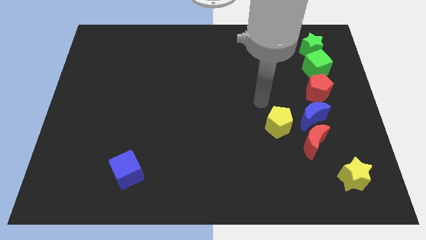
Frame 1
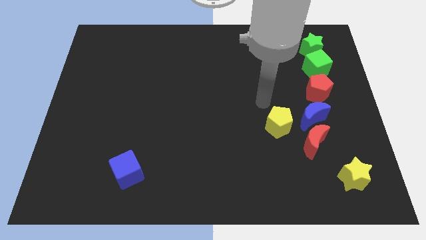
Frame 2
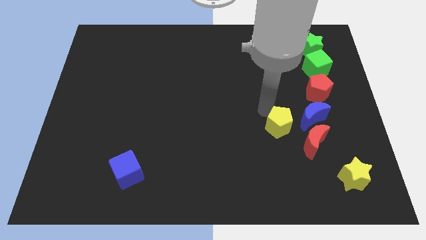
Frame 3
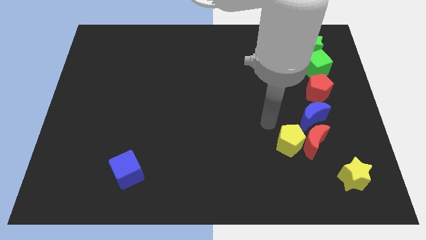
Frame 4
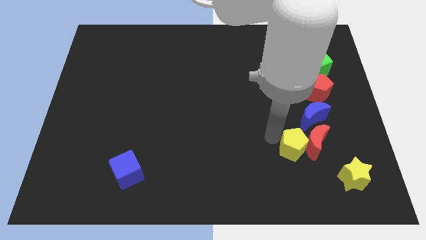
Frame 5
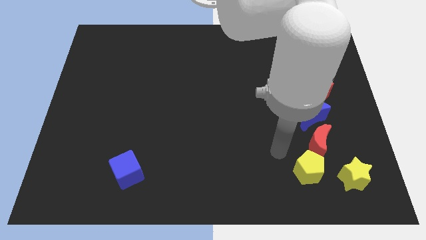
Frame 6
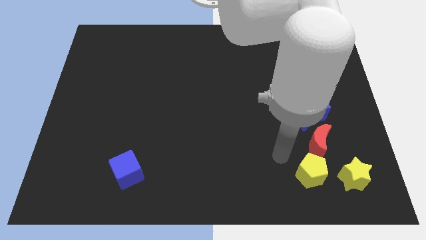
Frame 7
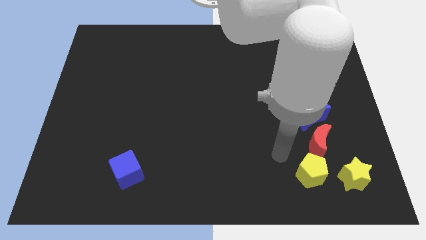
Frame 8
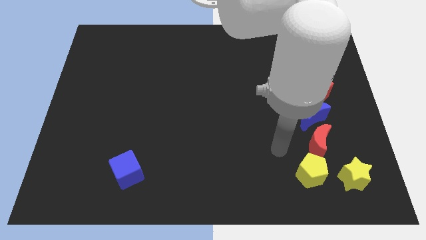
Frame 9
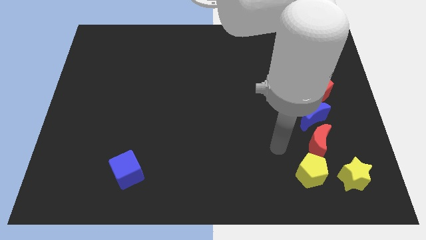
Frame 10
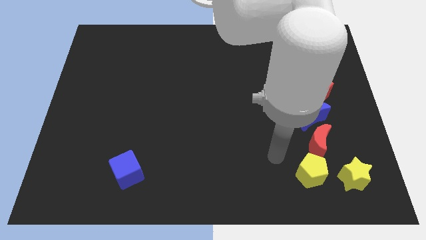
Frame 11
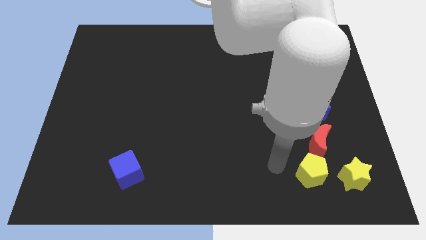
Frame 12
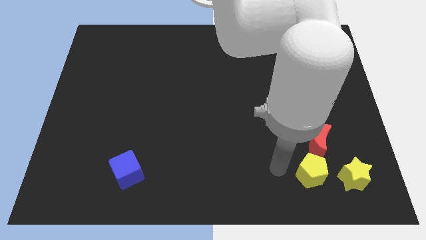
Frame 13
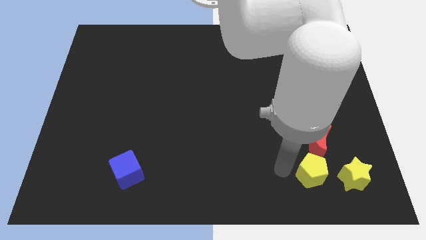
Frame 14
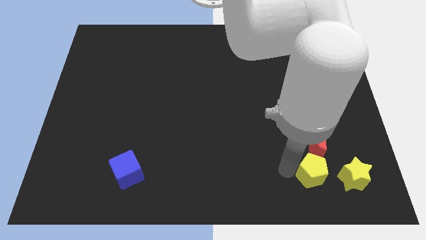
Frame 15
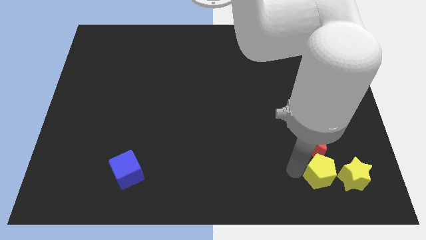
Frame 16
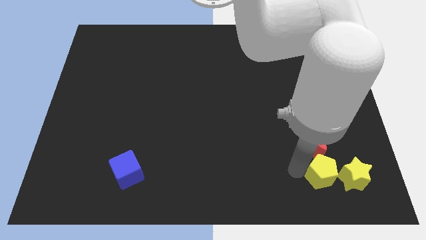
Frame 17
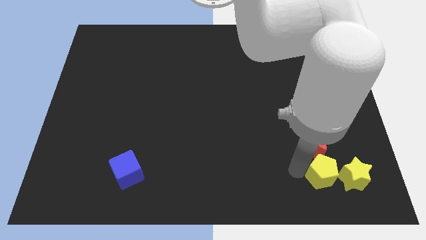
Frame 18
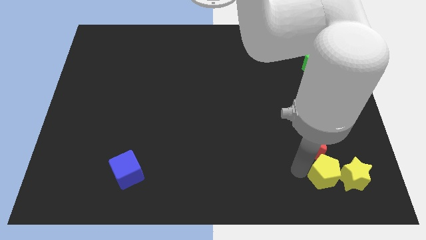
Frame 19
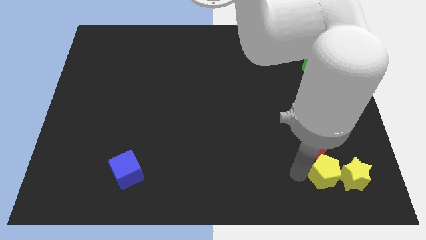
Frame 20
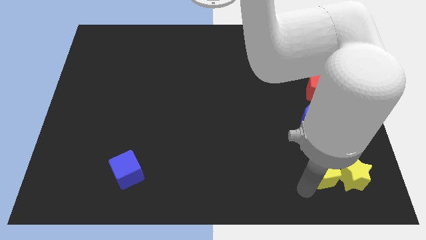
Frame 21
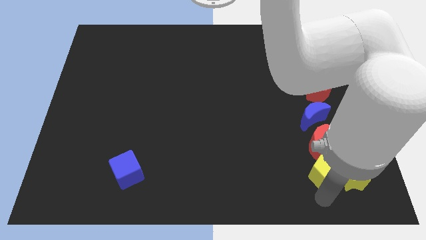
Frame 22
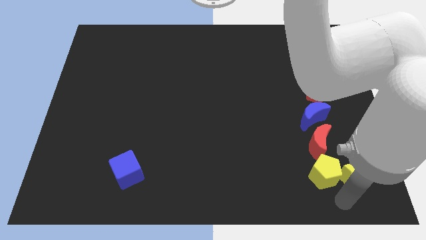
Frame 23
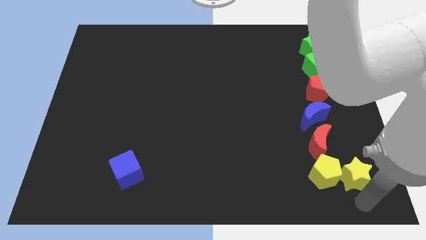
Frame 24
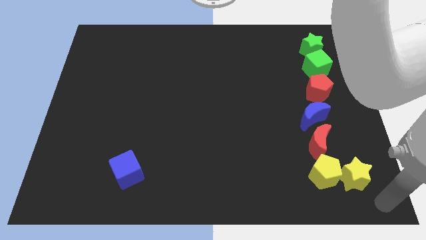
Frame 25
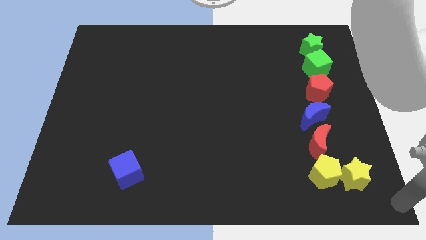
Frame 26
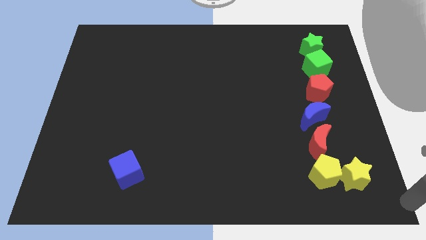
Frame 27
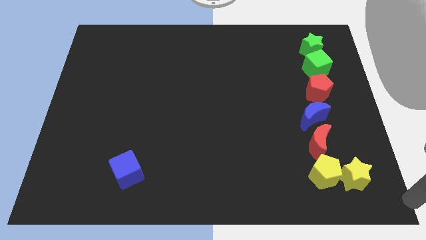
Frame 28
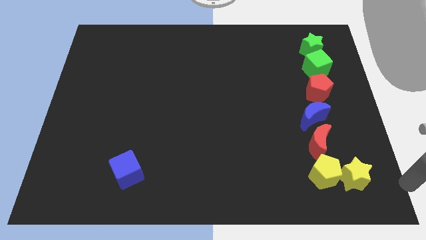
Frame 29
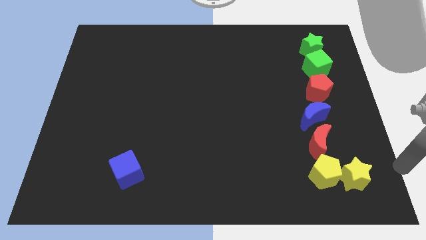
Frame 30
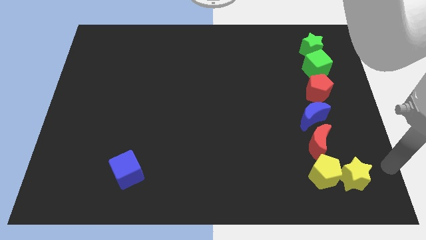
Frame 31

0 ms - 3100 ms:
push yellow pentagon between red crescent and yellow star

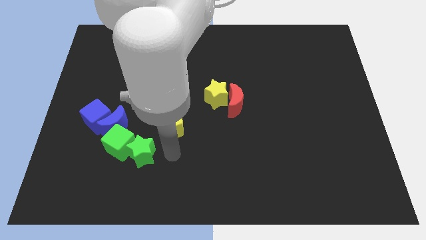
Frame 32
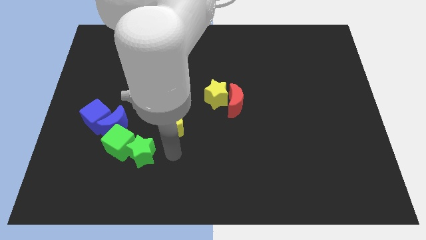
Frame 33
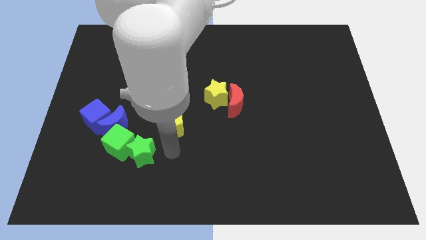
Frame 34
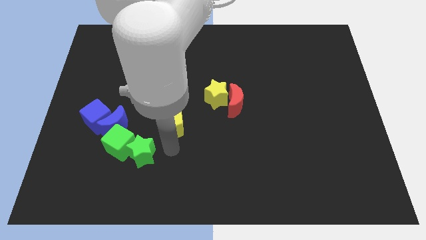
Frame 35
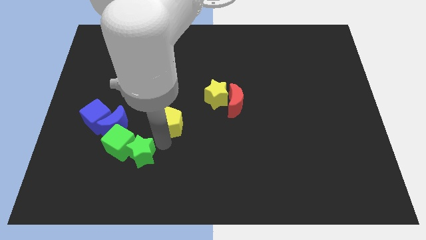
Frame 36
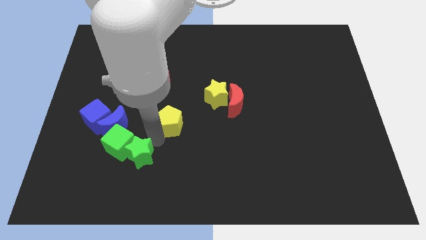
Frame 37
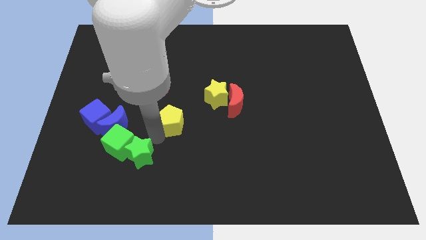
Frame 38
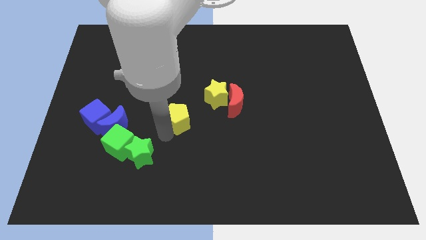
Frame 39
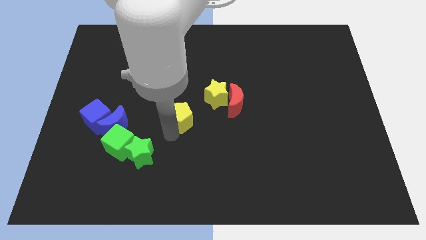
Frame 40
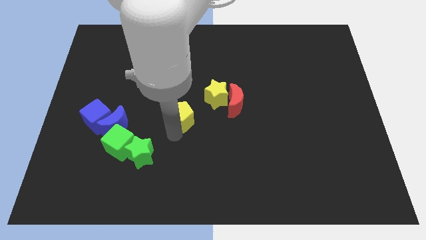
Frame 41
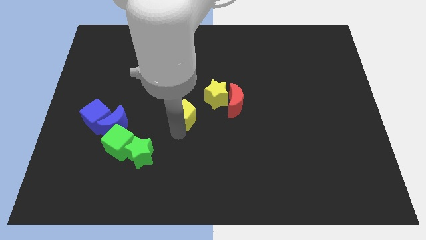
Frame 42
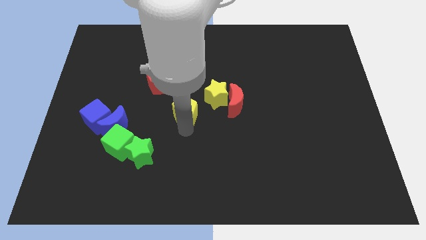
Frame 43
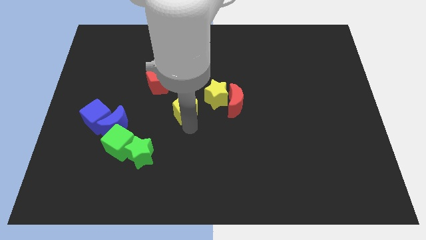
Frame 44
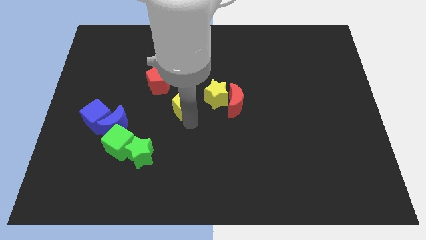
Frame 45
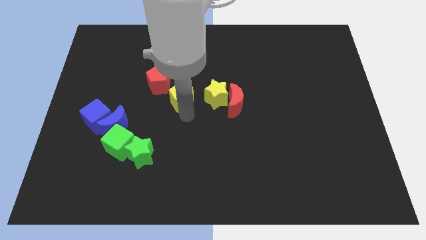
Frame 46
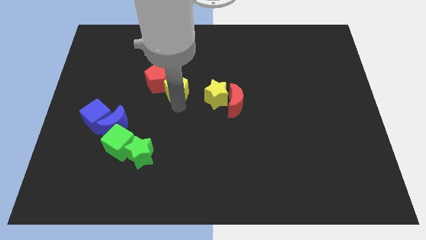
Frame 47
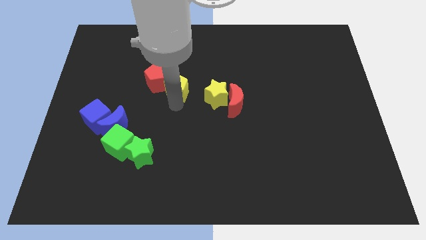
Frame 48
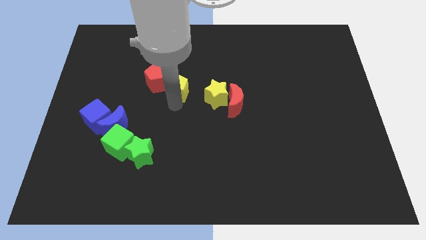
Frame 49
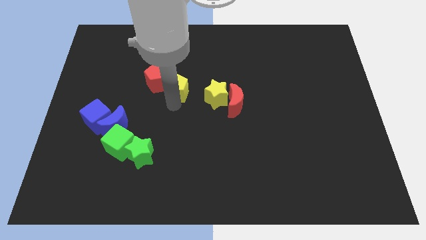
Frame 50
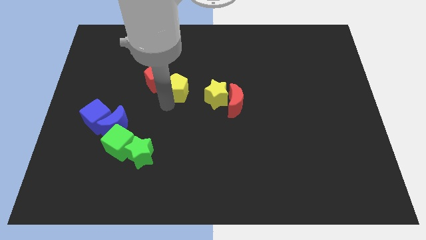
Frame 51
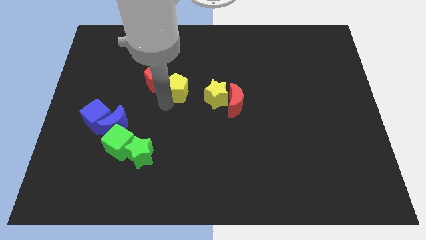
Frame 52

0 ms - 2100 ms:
move the yellow pentagon towards upward

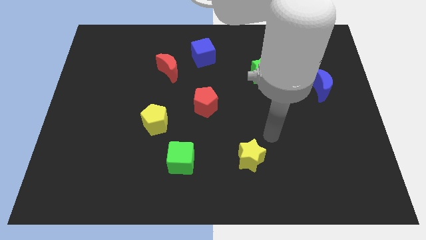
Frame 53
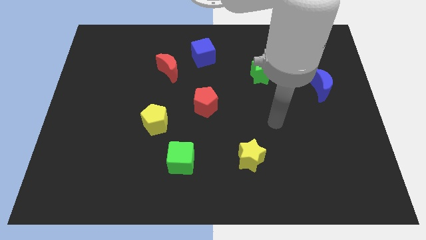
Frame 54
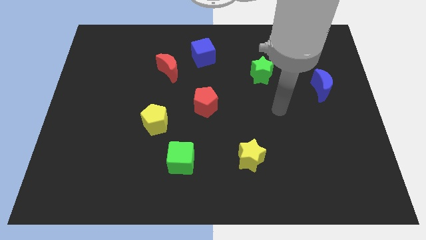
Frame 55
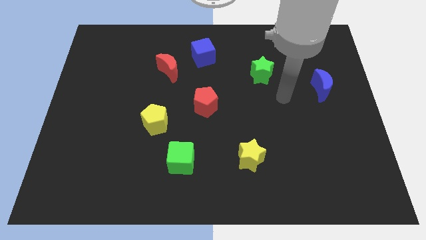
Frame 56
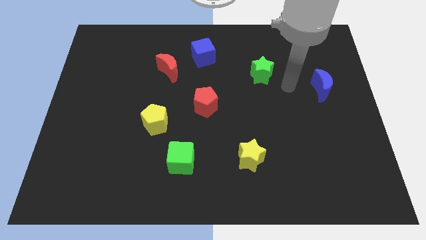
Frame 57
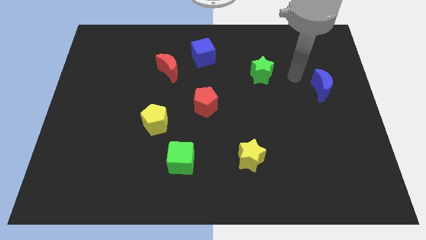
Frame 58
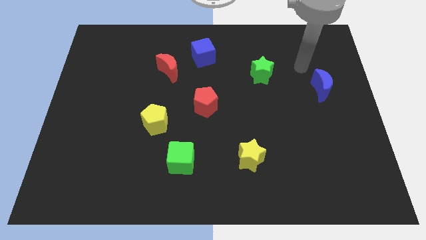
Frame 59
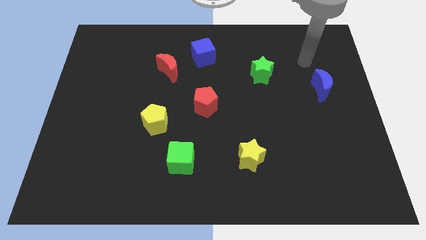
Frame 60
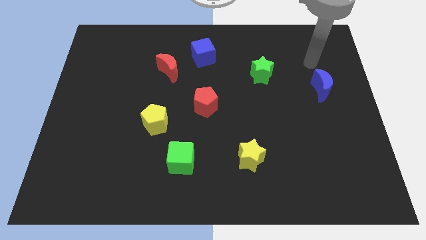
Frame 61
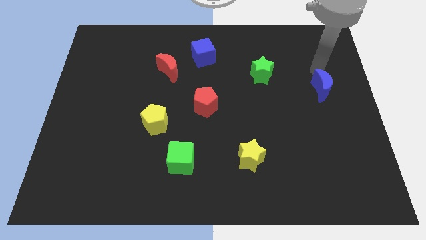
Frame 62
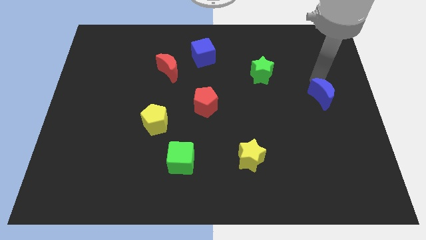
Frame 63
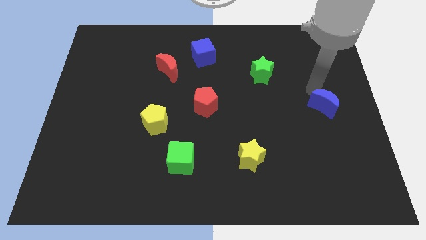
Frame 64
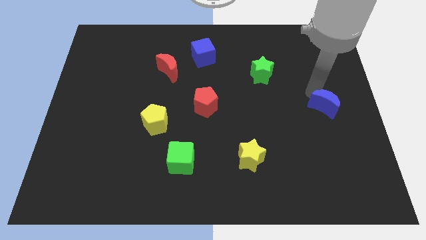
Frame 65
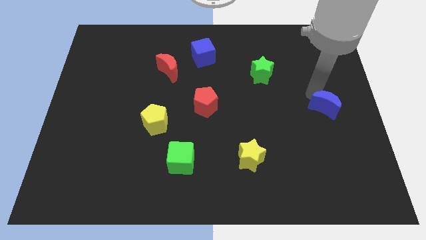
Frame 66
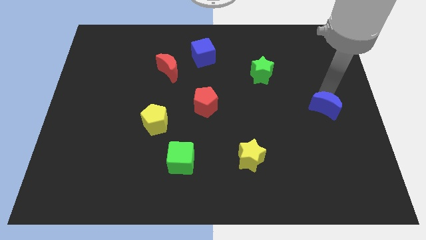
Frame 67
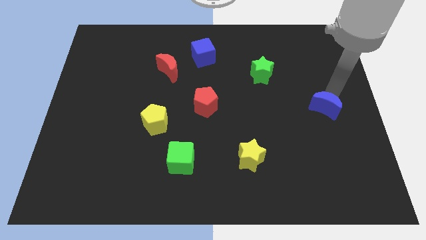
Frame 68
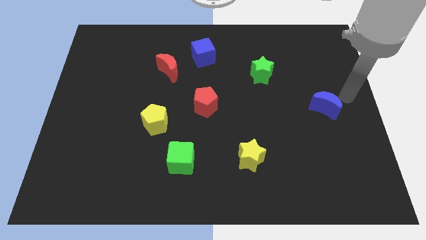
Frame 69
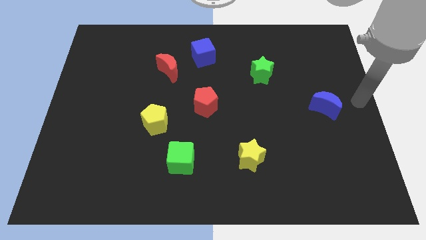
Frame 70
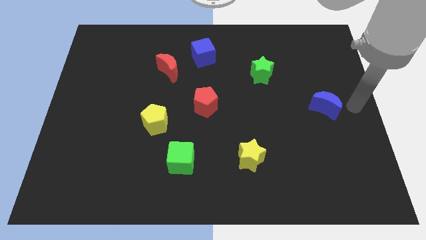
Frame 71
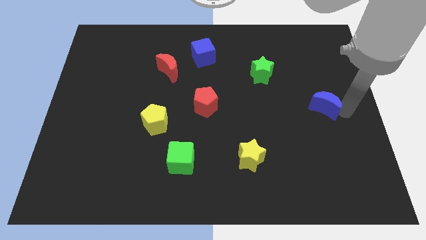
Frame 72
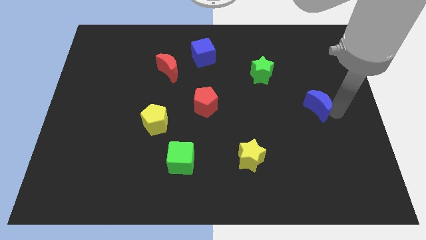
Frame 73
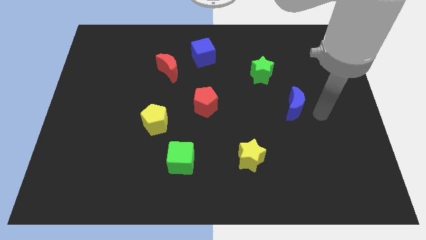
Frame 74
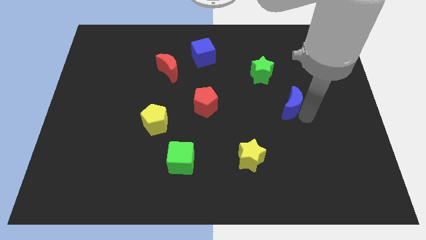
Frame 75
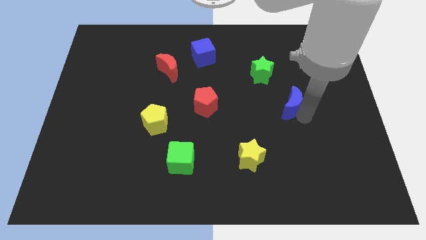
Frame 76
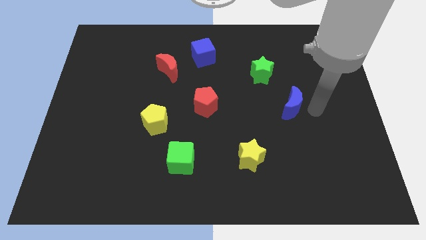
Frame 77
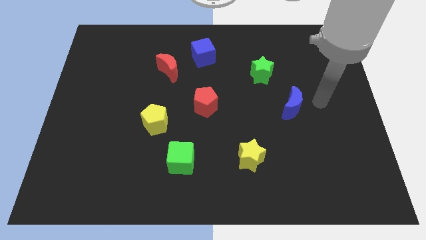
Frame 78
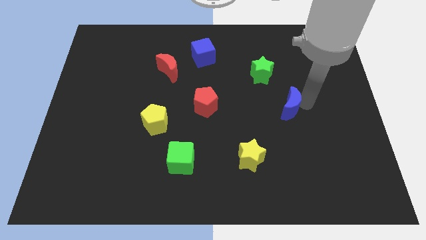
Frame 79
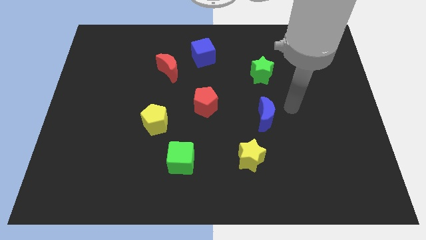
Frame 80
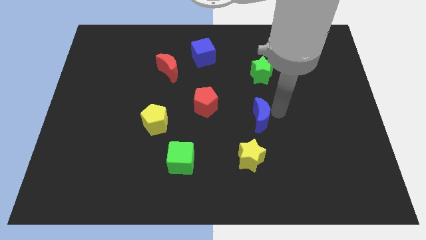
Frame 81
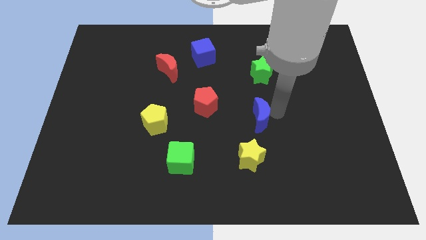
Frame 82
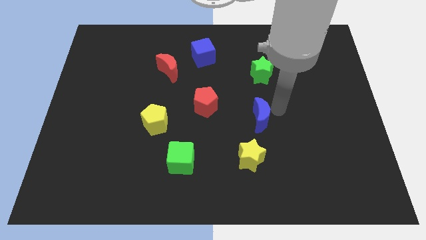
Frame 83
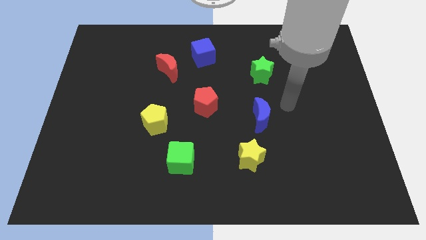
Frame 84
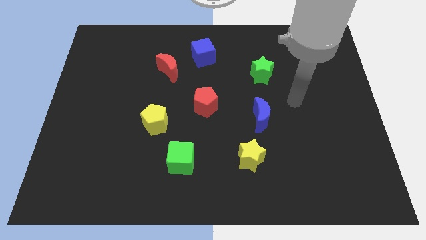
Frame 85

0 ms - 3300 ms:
move the blue crescent above the yellow star

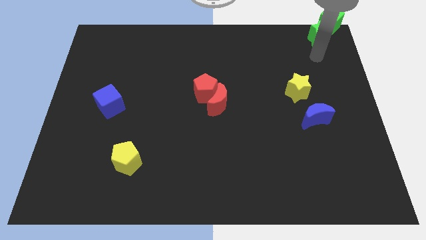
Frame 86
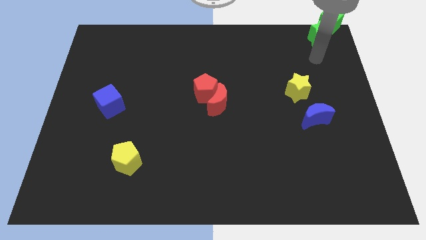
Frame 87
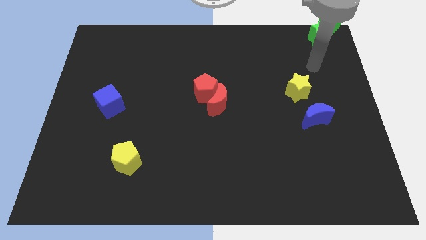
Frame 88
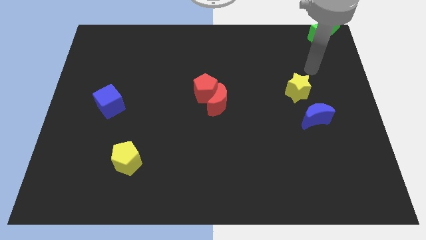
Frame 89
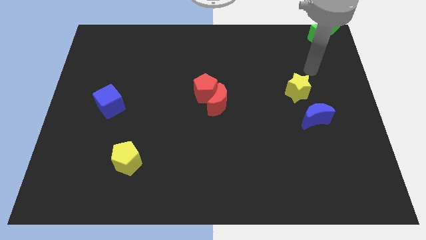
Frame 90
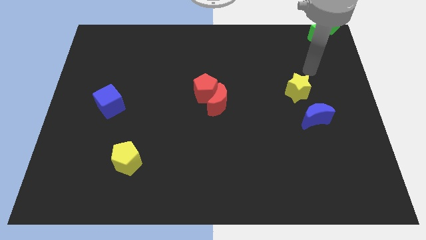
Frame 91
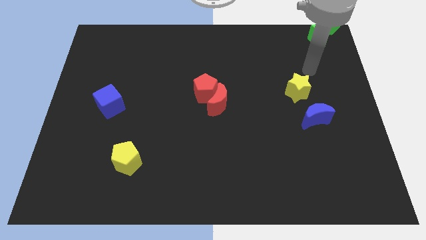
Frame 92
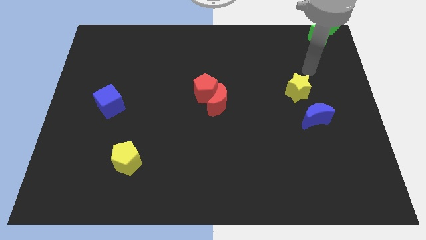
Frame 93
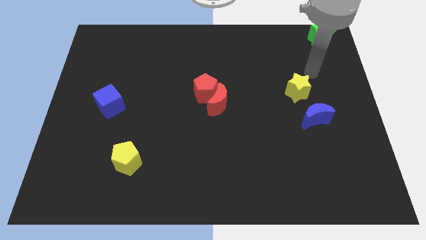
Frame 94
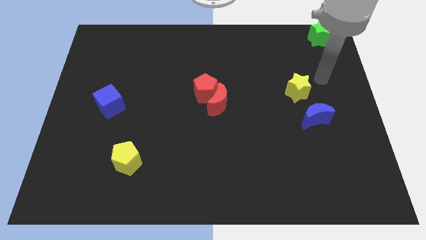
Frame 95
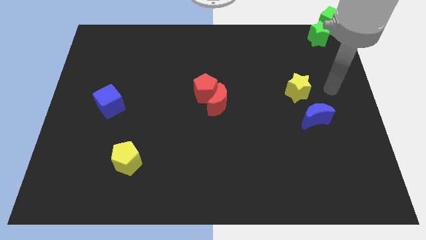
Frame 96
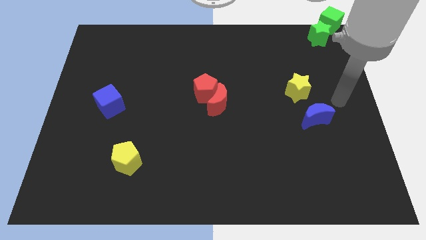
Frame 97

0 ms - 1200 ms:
move the arm away from the green star
